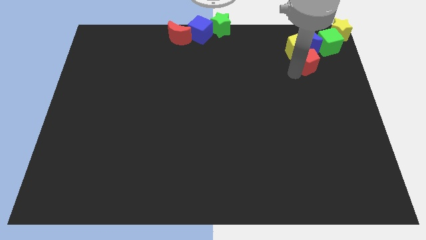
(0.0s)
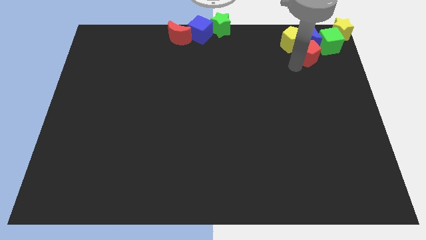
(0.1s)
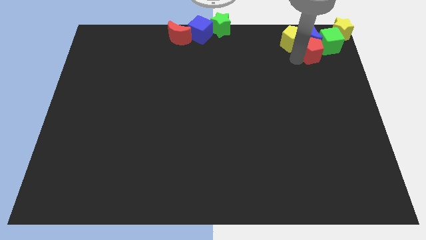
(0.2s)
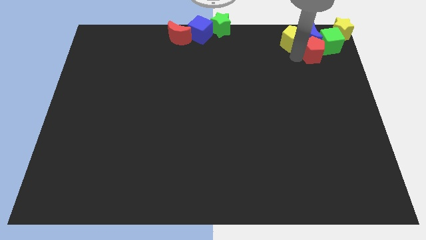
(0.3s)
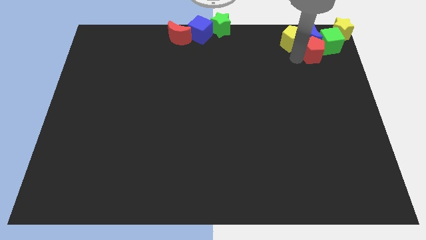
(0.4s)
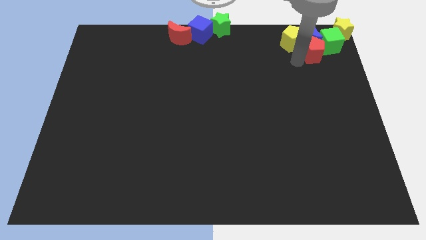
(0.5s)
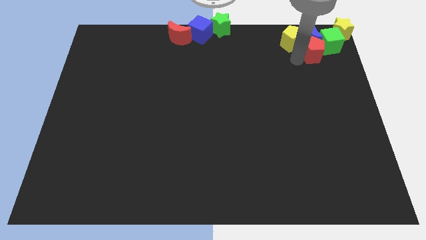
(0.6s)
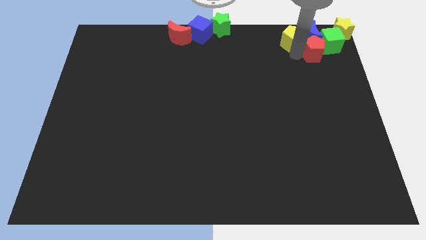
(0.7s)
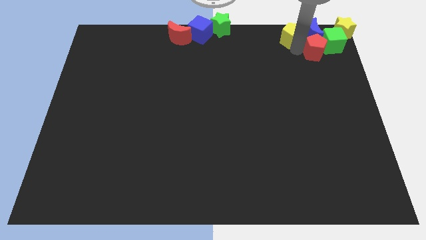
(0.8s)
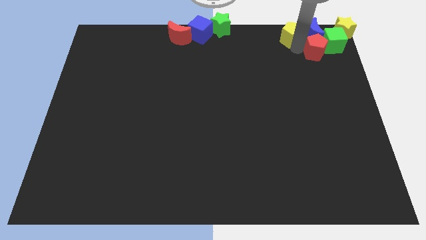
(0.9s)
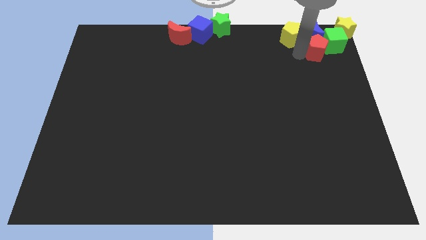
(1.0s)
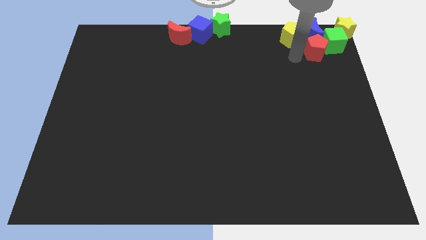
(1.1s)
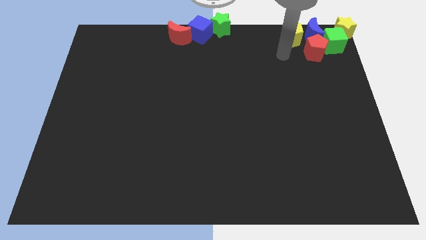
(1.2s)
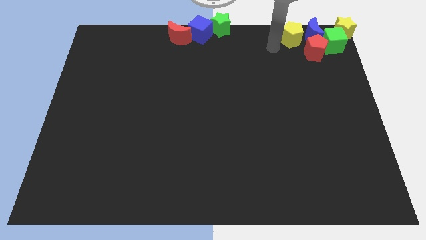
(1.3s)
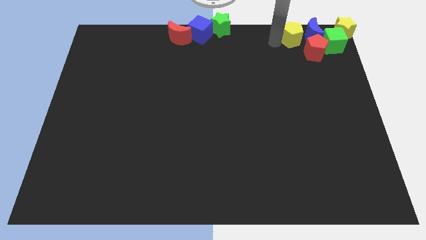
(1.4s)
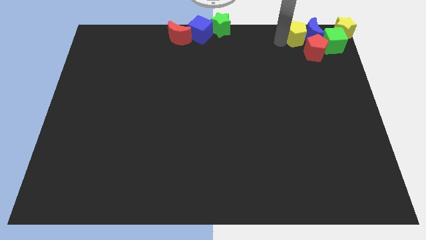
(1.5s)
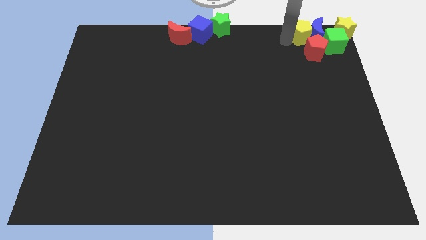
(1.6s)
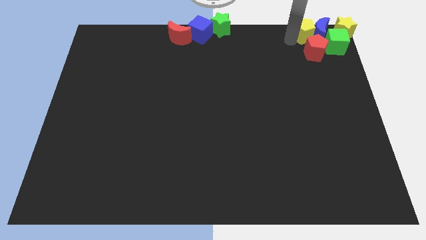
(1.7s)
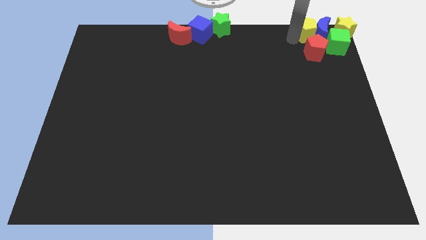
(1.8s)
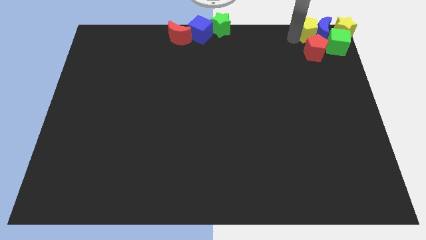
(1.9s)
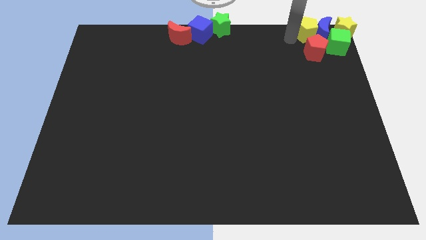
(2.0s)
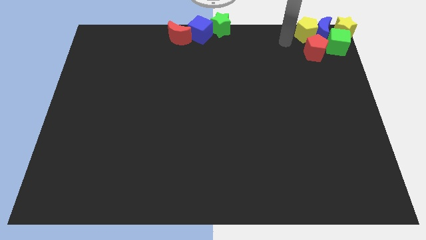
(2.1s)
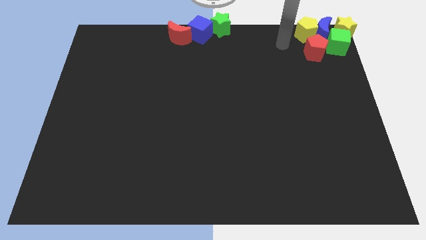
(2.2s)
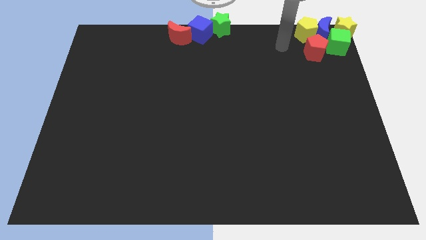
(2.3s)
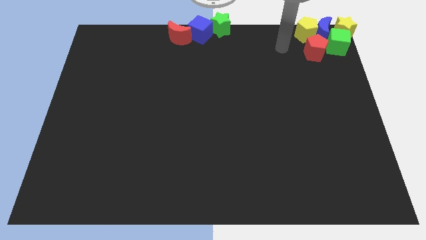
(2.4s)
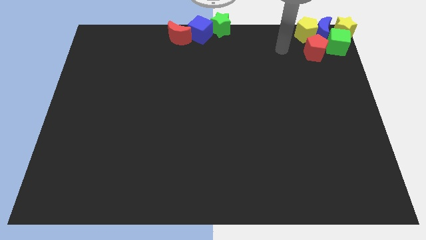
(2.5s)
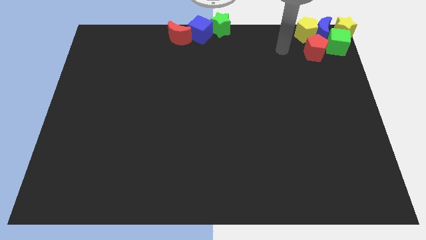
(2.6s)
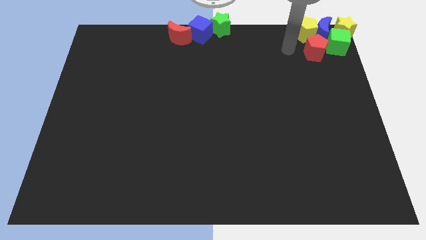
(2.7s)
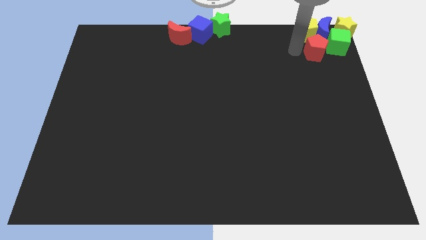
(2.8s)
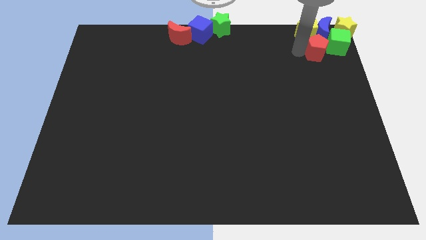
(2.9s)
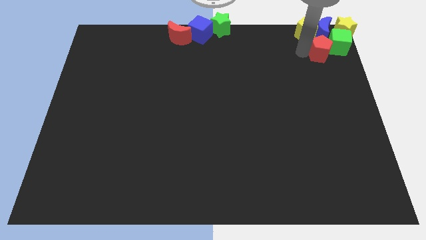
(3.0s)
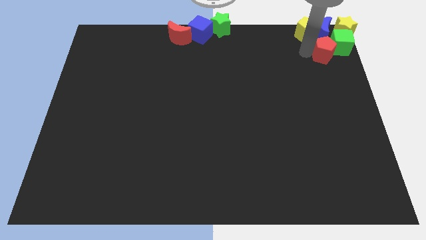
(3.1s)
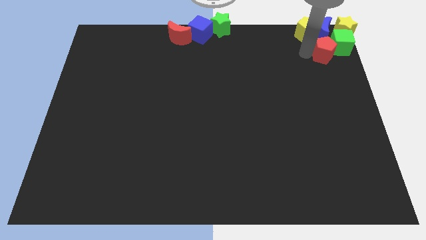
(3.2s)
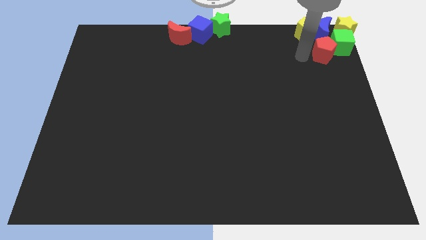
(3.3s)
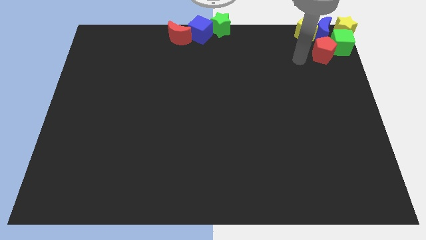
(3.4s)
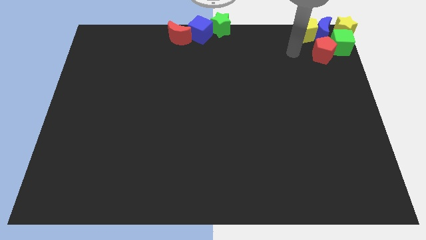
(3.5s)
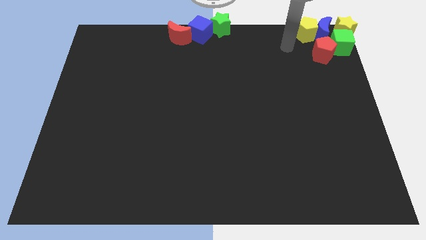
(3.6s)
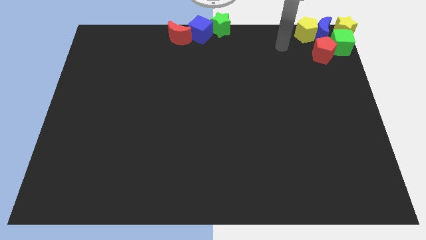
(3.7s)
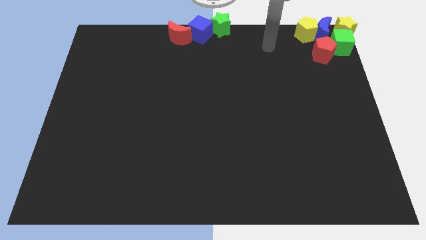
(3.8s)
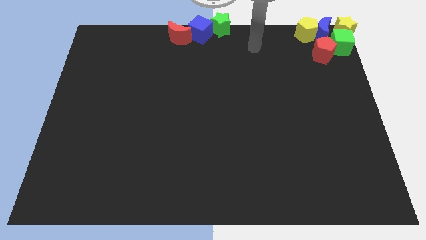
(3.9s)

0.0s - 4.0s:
push objects to the right top corner

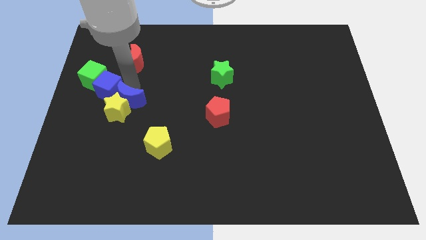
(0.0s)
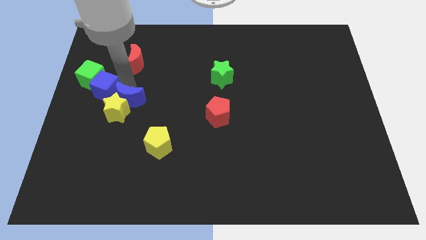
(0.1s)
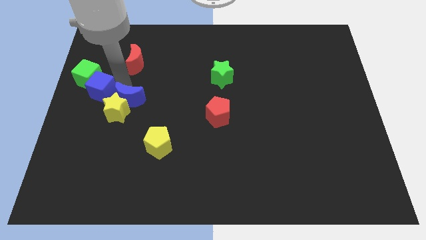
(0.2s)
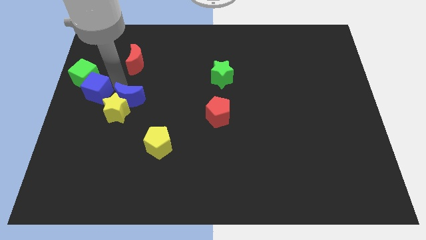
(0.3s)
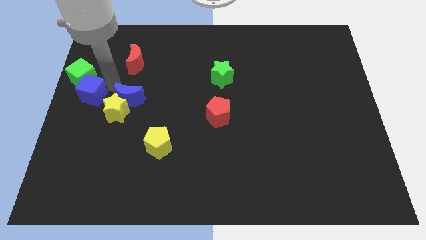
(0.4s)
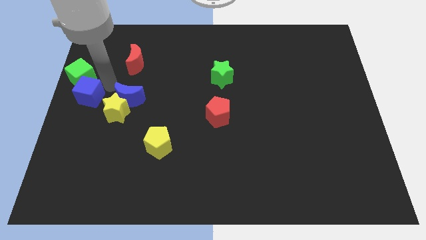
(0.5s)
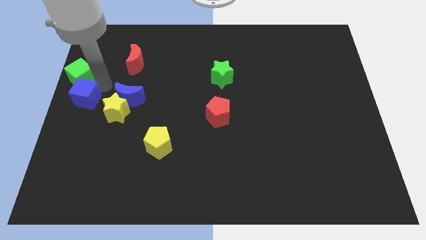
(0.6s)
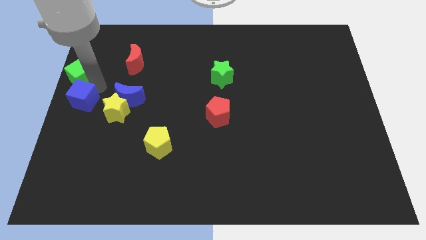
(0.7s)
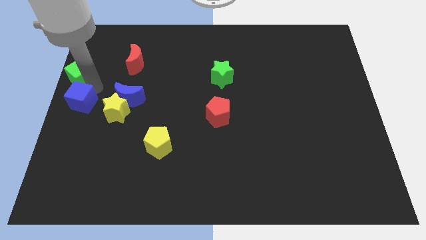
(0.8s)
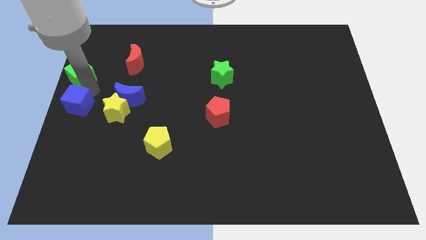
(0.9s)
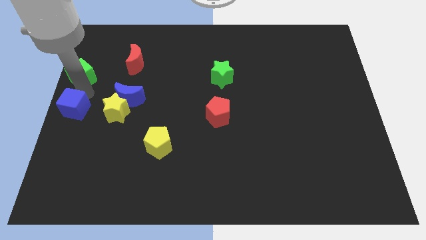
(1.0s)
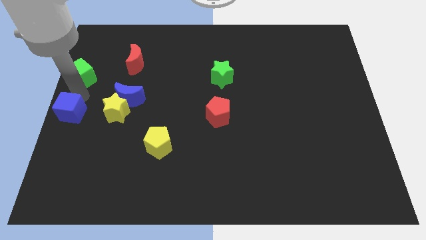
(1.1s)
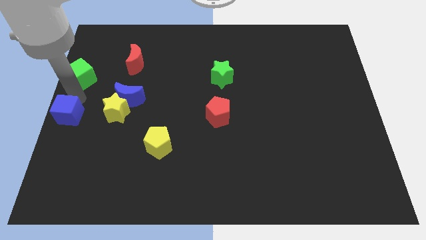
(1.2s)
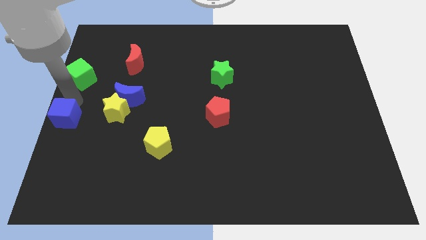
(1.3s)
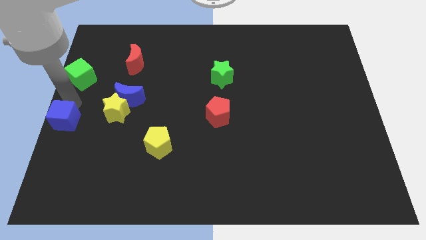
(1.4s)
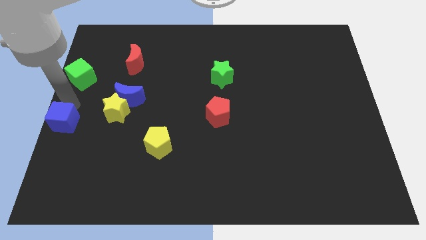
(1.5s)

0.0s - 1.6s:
separate the blue cube from the blue moon

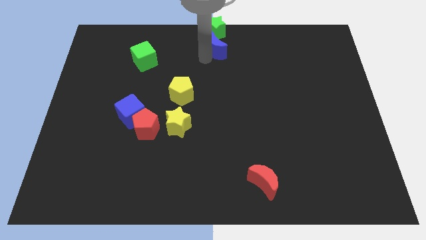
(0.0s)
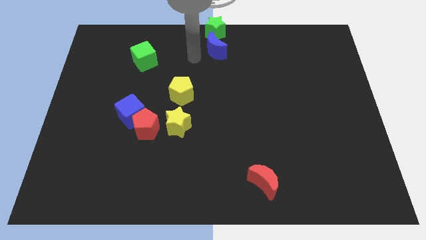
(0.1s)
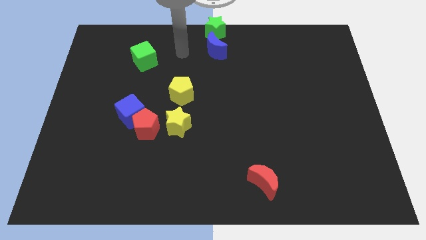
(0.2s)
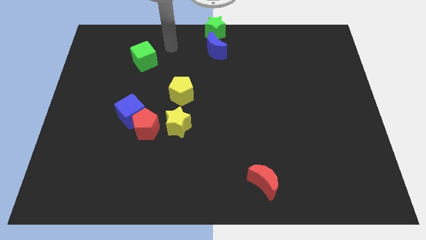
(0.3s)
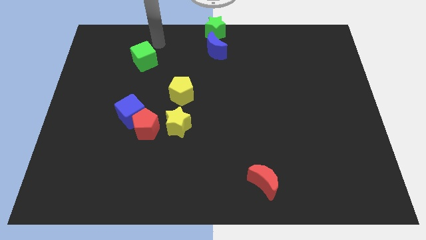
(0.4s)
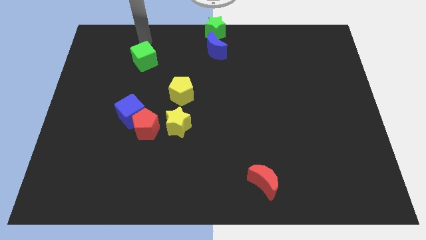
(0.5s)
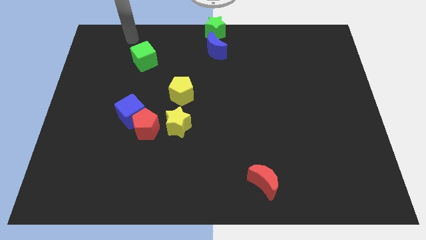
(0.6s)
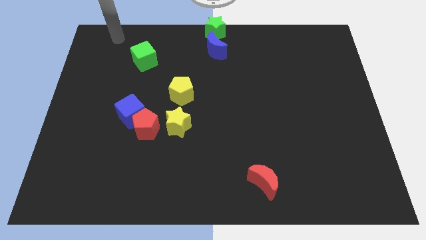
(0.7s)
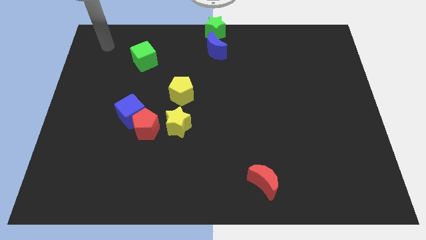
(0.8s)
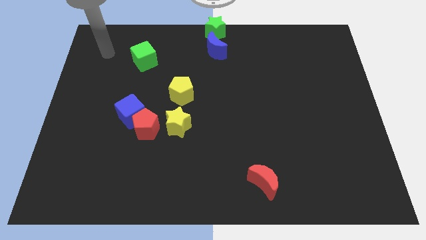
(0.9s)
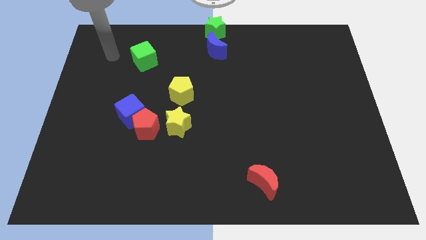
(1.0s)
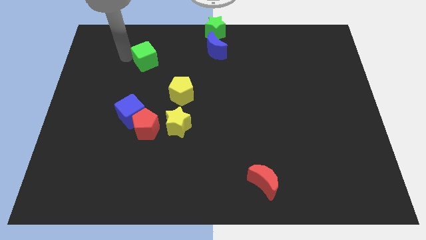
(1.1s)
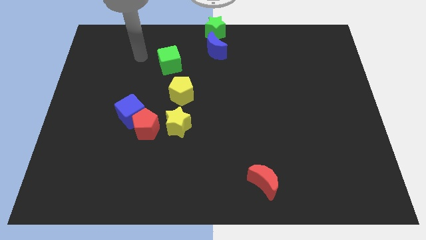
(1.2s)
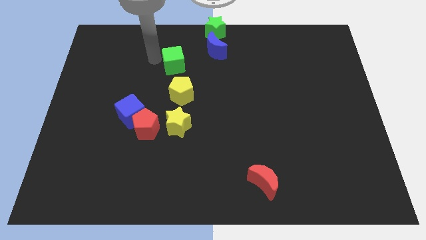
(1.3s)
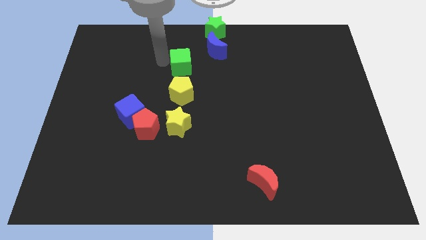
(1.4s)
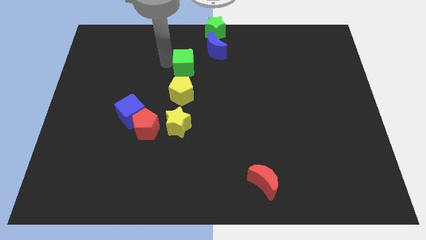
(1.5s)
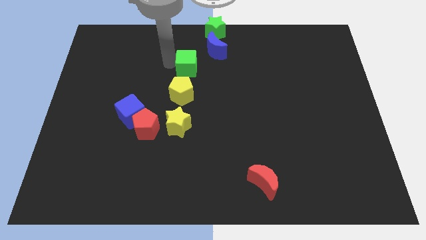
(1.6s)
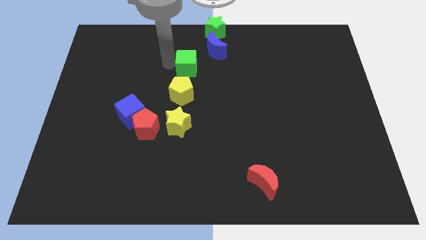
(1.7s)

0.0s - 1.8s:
place the green cube above the yellow pentagon

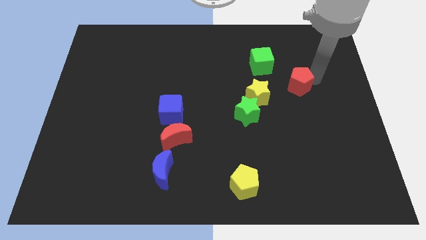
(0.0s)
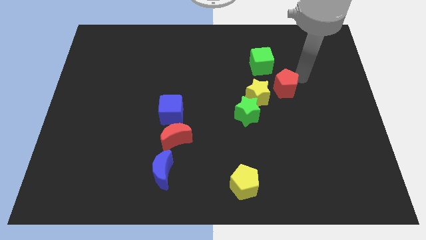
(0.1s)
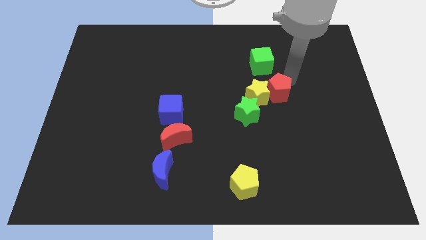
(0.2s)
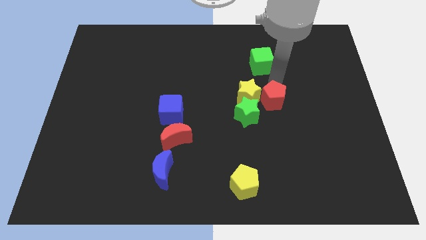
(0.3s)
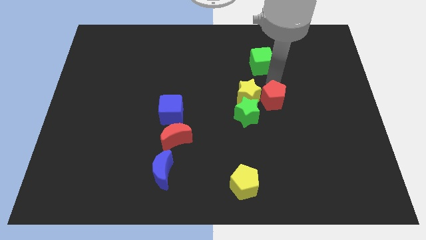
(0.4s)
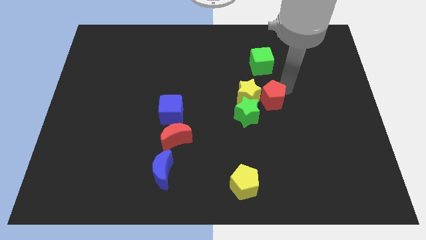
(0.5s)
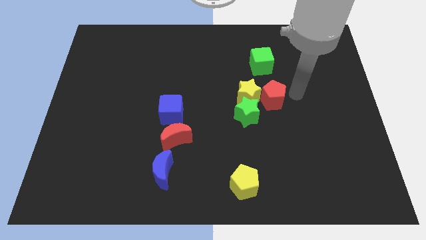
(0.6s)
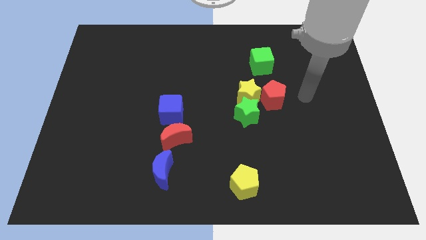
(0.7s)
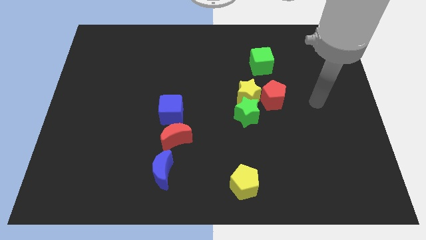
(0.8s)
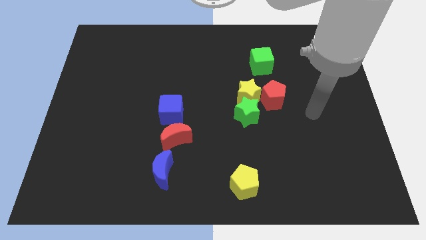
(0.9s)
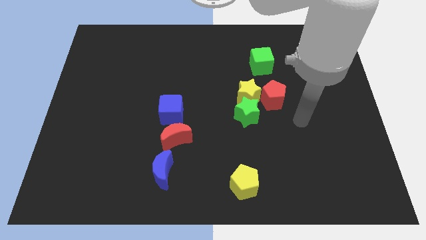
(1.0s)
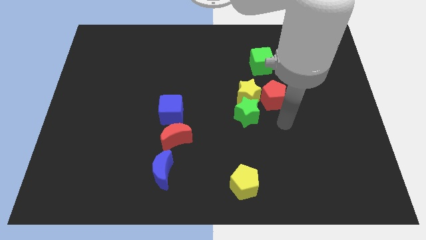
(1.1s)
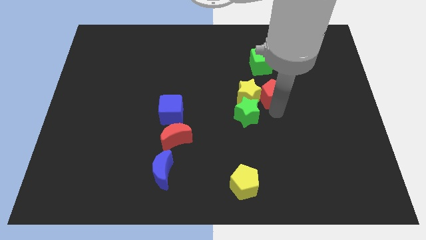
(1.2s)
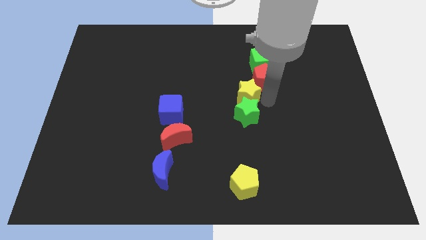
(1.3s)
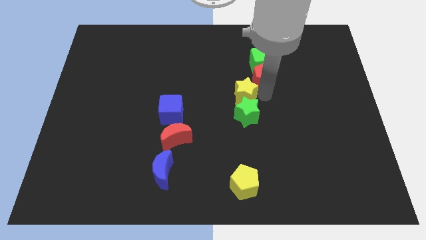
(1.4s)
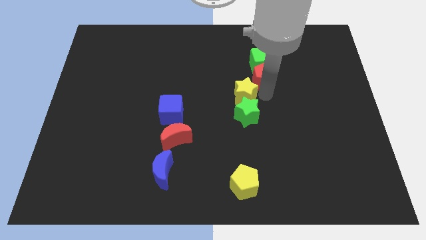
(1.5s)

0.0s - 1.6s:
push the red pentagon into the bottom side of the green cube
